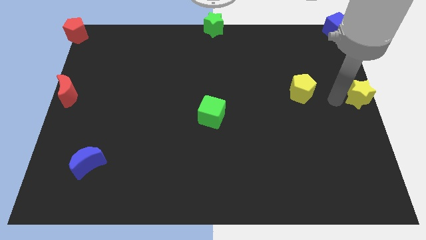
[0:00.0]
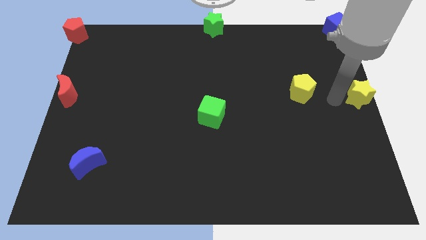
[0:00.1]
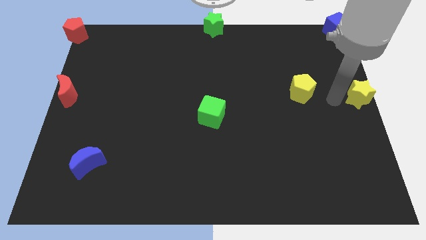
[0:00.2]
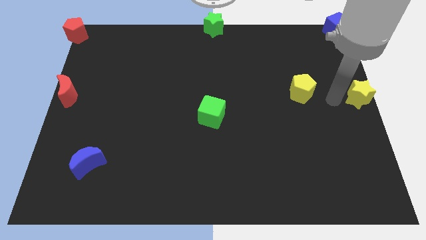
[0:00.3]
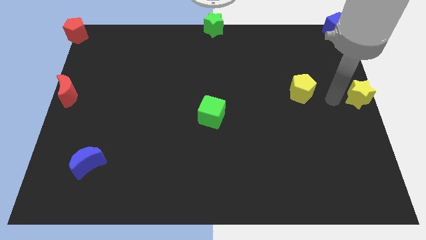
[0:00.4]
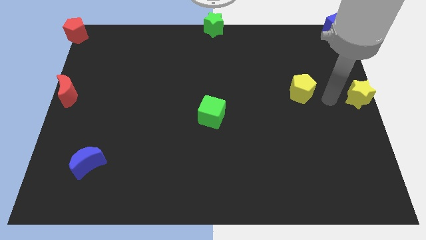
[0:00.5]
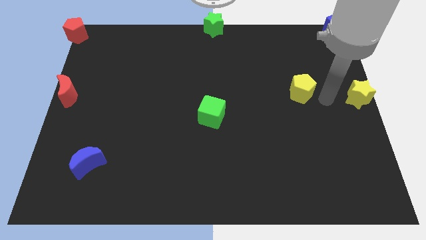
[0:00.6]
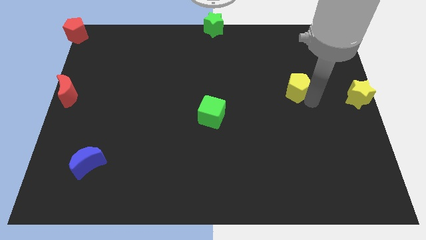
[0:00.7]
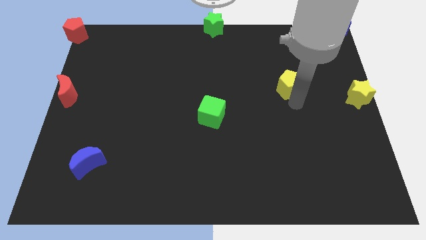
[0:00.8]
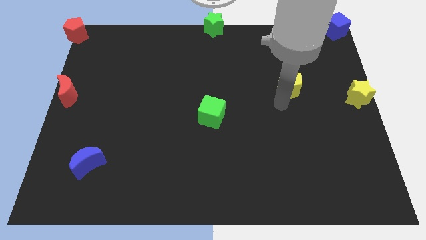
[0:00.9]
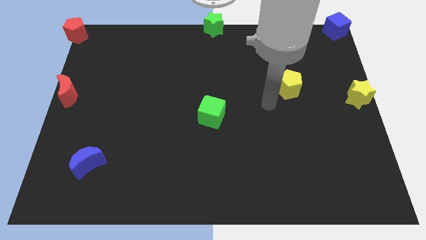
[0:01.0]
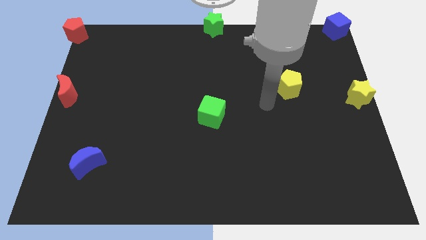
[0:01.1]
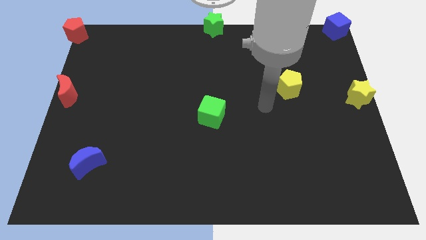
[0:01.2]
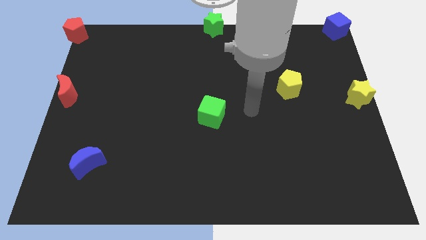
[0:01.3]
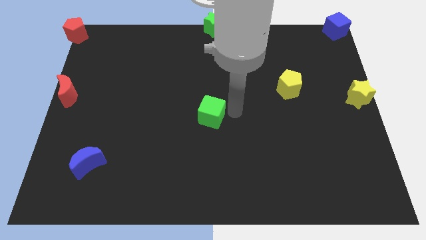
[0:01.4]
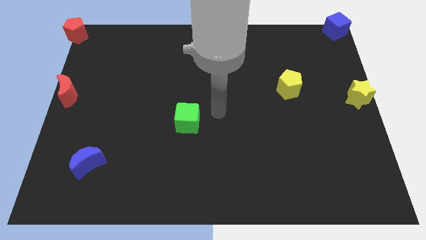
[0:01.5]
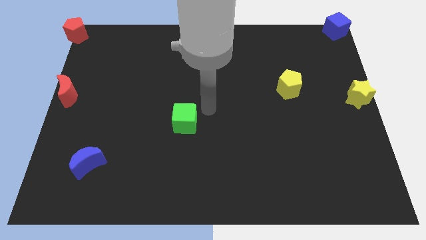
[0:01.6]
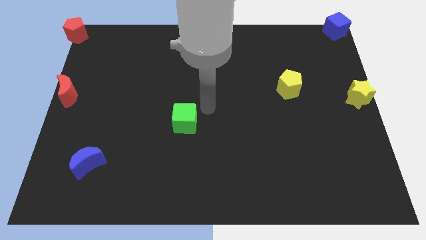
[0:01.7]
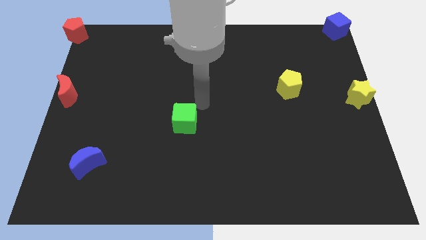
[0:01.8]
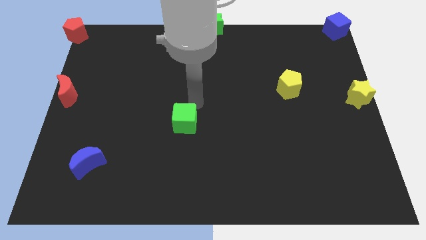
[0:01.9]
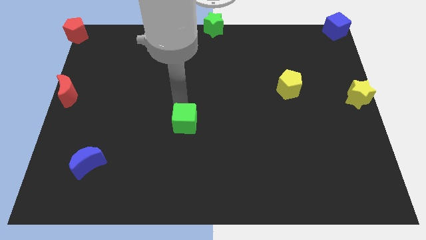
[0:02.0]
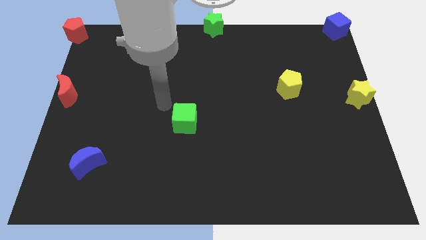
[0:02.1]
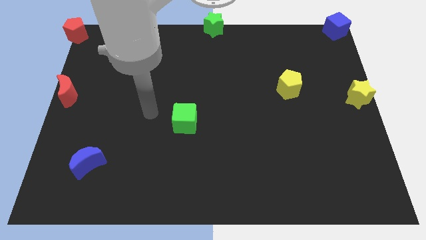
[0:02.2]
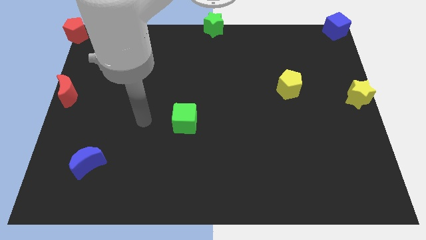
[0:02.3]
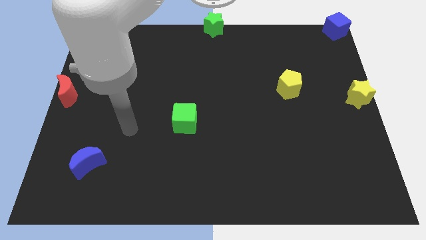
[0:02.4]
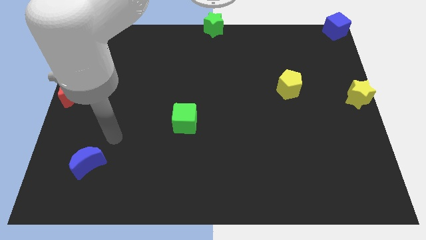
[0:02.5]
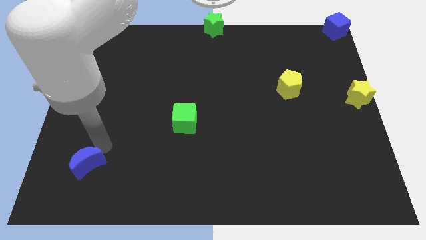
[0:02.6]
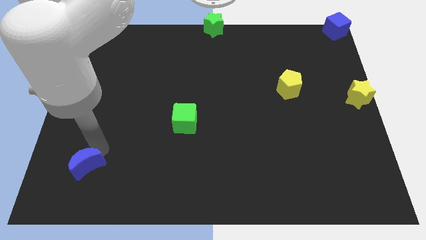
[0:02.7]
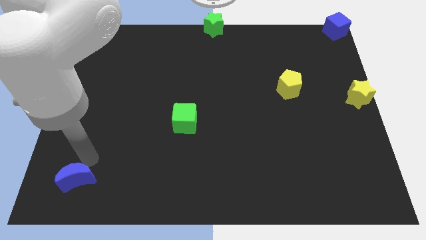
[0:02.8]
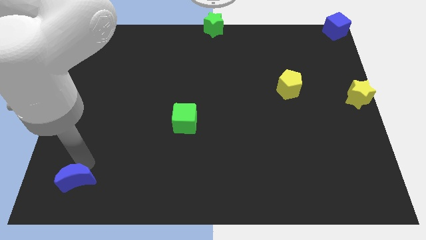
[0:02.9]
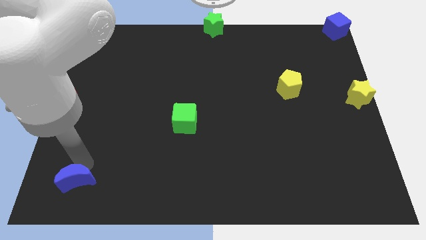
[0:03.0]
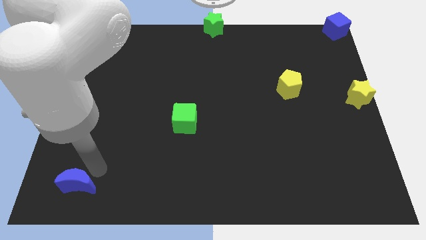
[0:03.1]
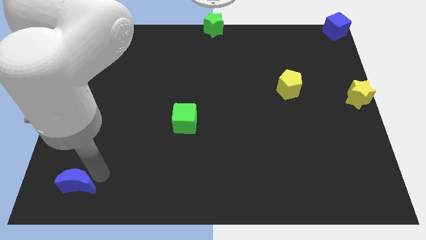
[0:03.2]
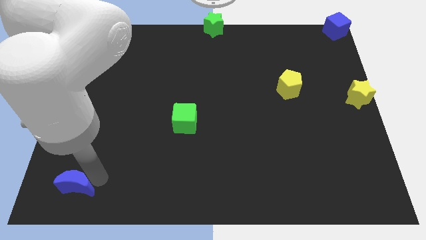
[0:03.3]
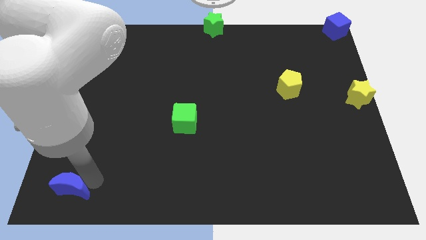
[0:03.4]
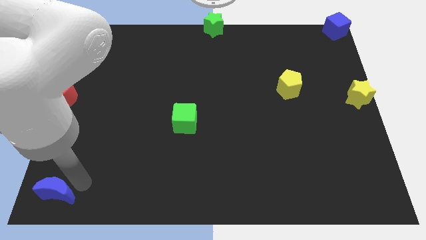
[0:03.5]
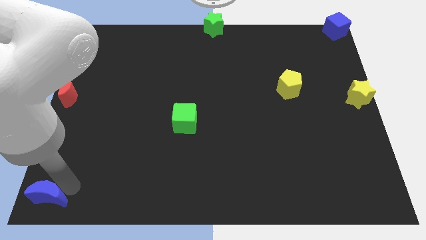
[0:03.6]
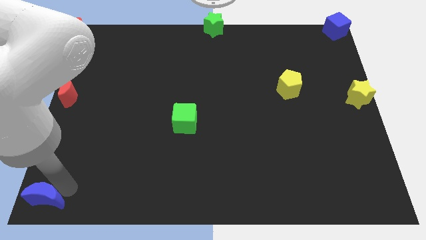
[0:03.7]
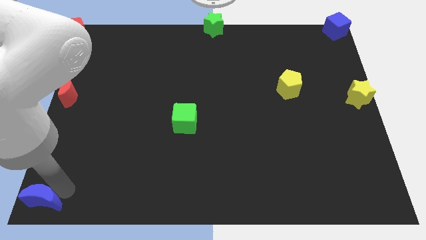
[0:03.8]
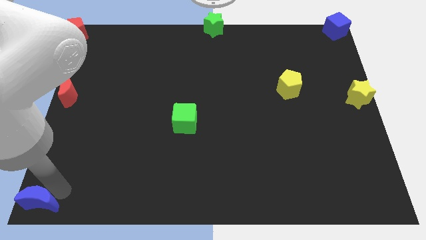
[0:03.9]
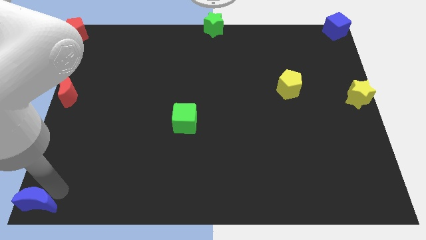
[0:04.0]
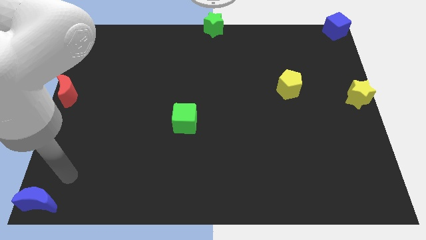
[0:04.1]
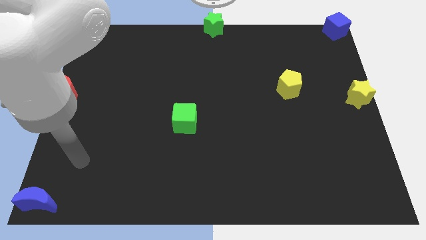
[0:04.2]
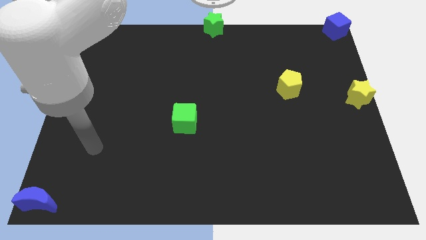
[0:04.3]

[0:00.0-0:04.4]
push the blue moon to the bottom left of the board

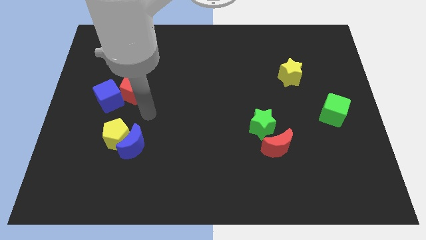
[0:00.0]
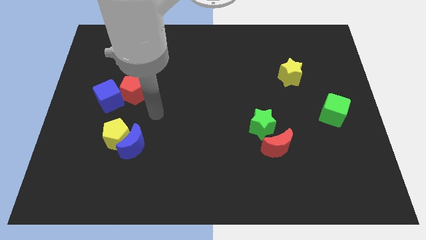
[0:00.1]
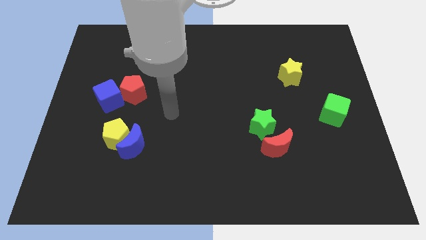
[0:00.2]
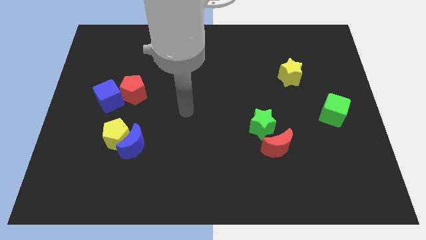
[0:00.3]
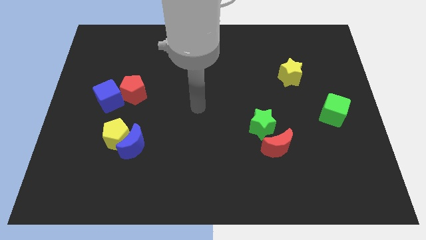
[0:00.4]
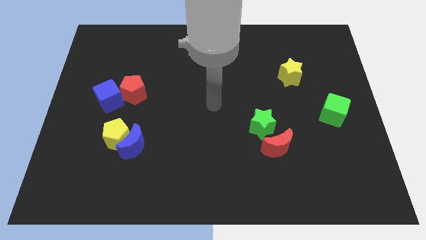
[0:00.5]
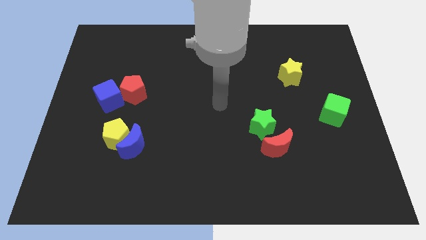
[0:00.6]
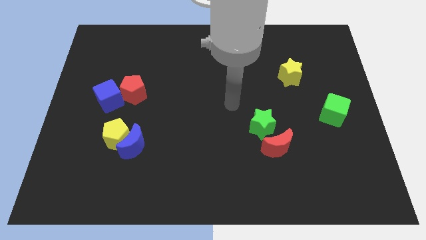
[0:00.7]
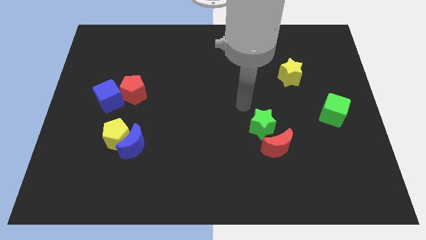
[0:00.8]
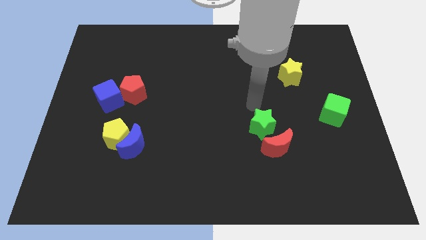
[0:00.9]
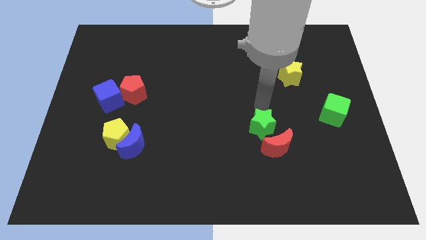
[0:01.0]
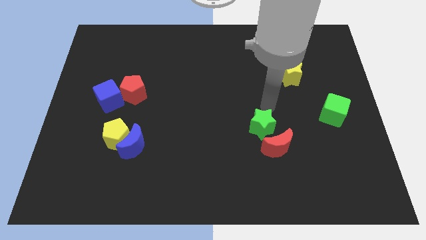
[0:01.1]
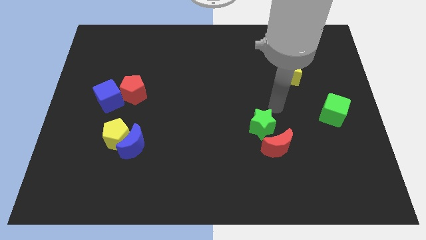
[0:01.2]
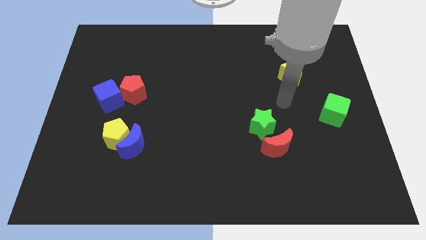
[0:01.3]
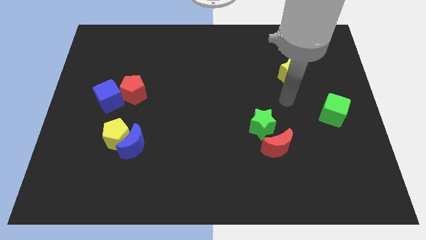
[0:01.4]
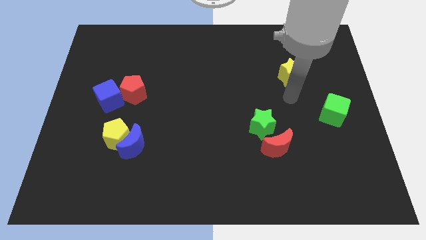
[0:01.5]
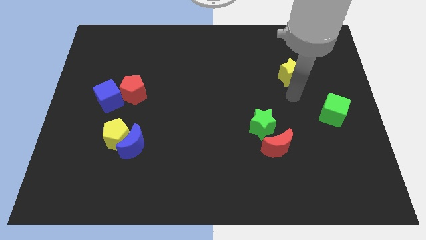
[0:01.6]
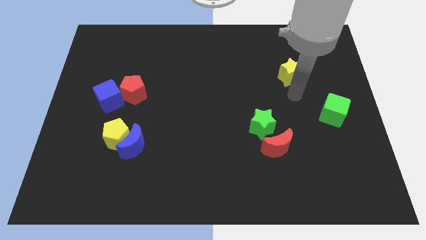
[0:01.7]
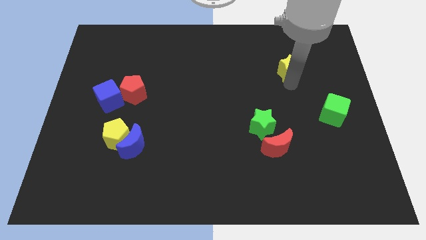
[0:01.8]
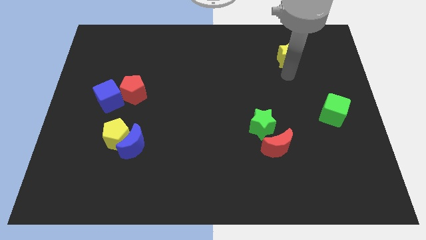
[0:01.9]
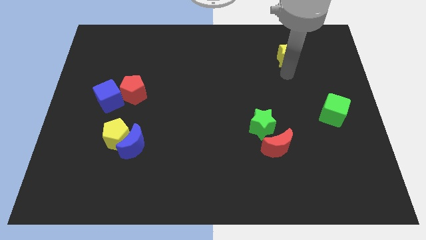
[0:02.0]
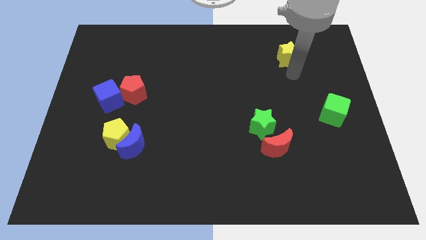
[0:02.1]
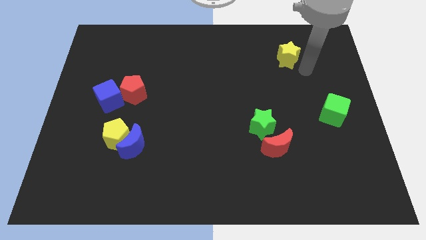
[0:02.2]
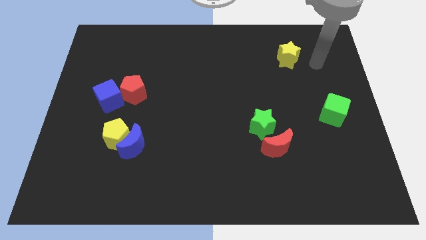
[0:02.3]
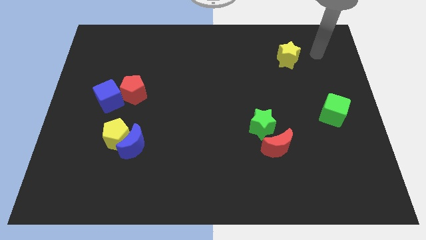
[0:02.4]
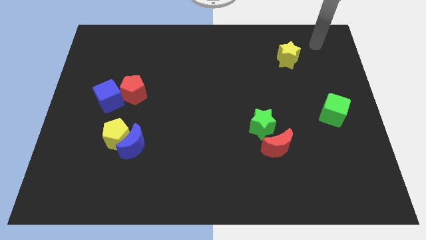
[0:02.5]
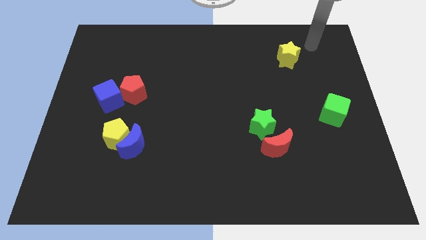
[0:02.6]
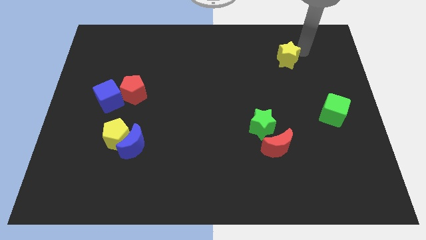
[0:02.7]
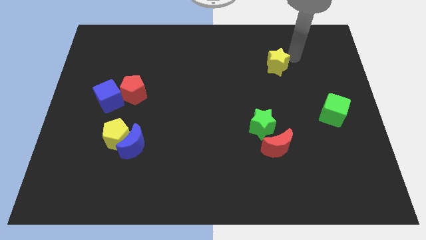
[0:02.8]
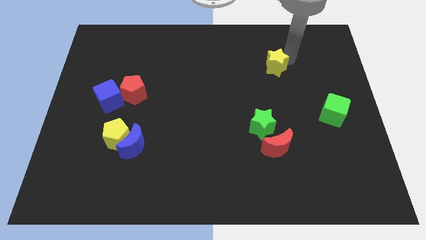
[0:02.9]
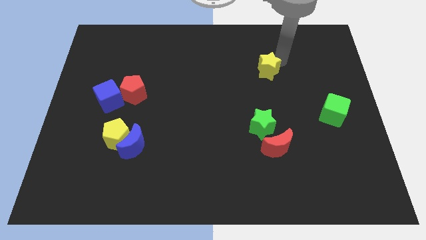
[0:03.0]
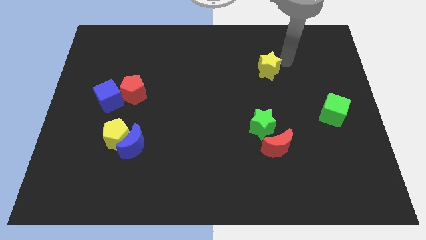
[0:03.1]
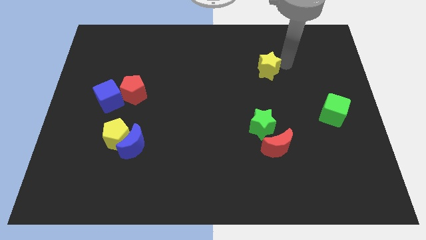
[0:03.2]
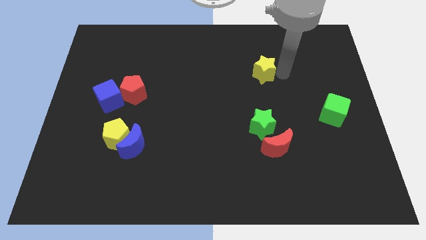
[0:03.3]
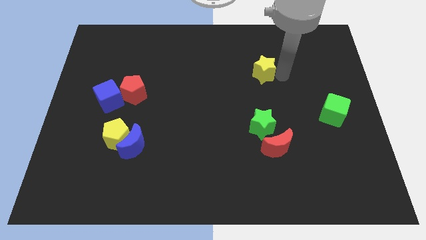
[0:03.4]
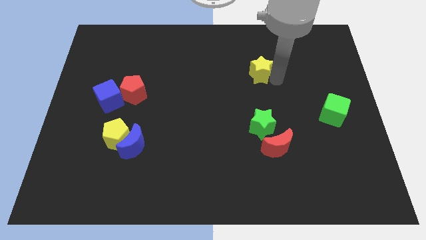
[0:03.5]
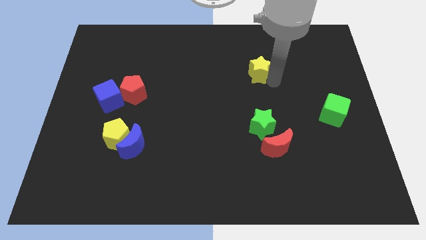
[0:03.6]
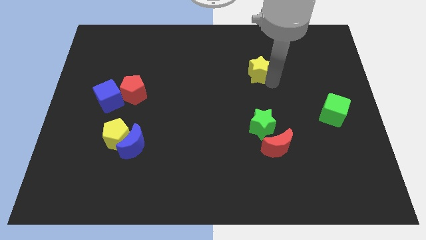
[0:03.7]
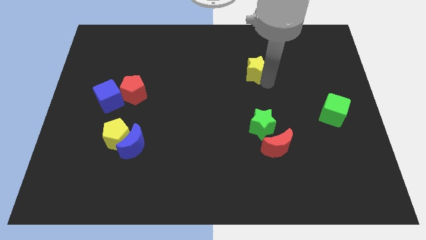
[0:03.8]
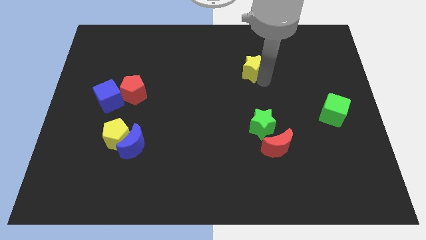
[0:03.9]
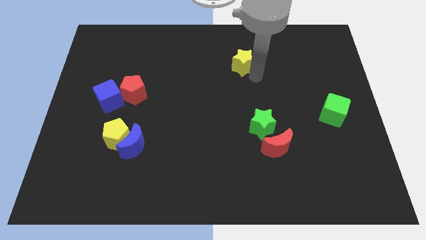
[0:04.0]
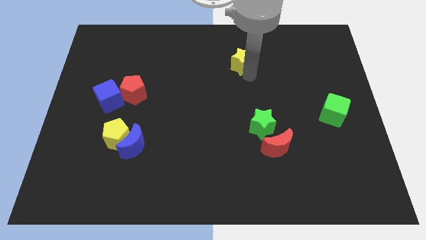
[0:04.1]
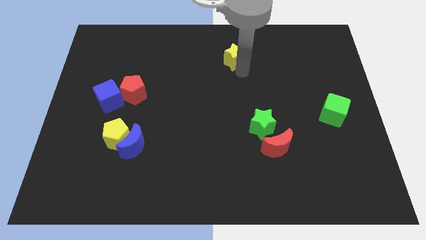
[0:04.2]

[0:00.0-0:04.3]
move your arm close to the yellow star

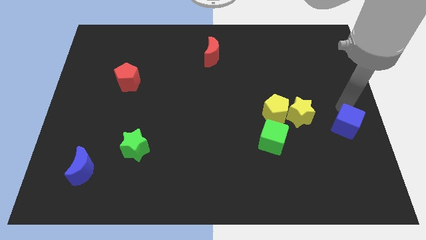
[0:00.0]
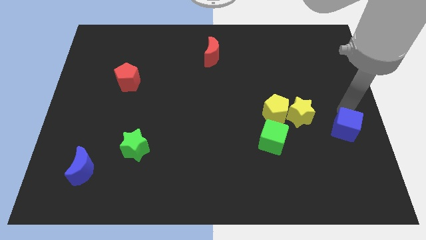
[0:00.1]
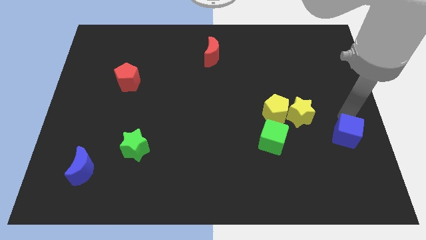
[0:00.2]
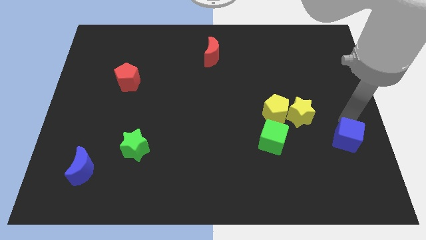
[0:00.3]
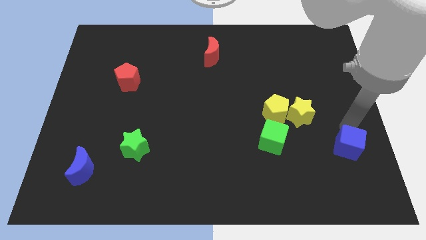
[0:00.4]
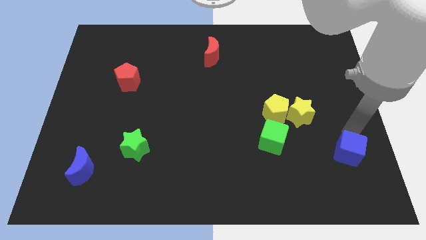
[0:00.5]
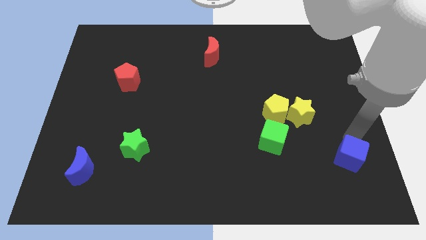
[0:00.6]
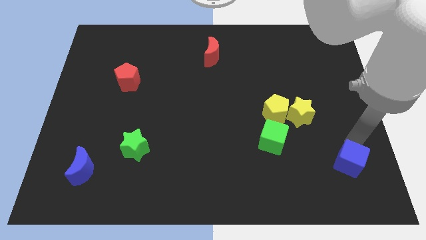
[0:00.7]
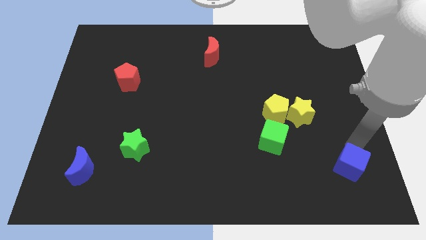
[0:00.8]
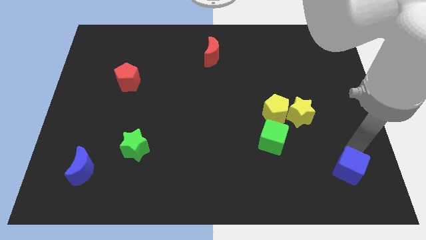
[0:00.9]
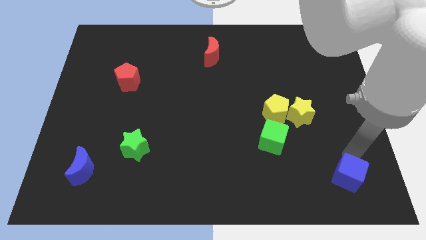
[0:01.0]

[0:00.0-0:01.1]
push the blue cube slightly towards bottom
